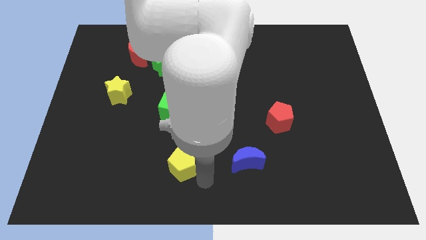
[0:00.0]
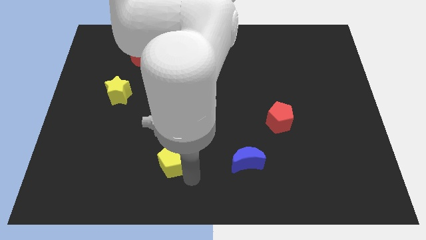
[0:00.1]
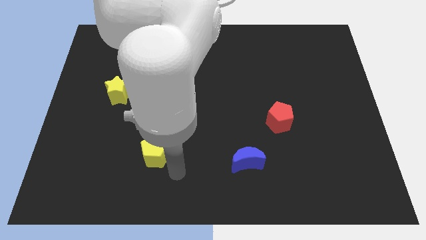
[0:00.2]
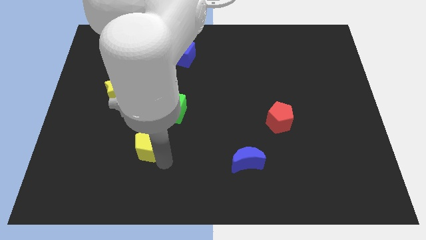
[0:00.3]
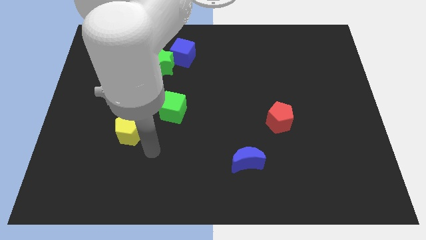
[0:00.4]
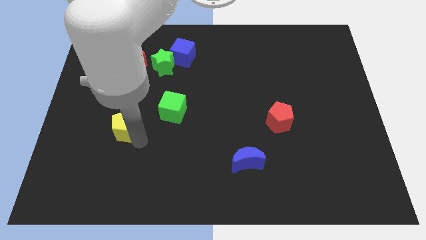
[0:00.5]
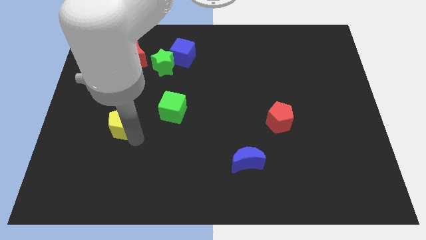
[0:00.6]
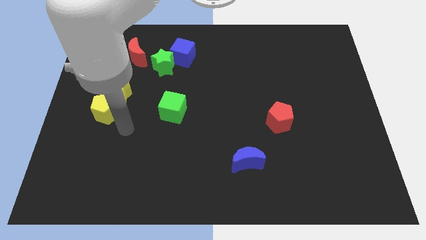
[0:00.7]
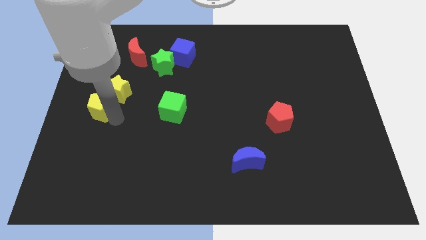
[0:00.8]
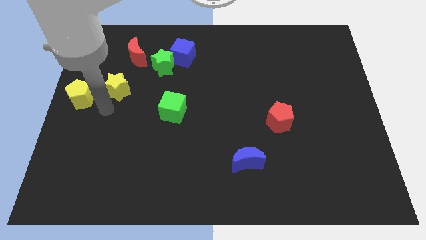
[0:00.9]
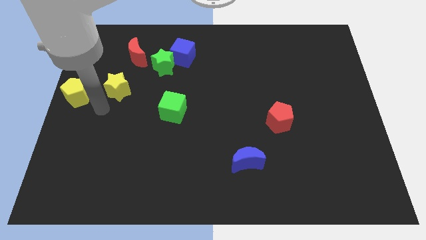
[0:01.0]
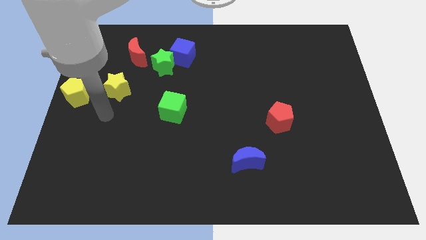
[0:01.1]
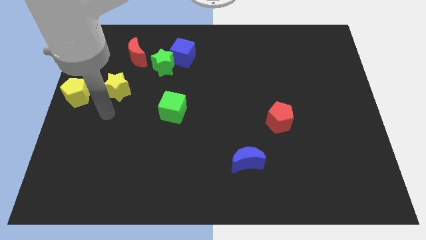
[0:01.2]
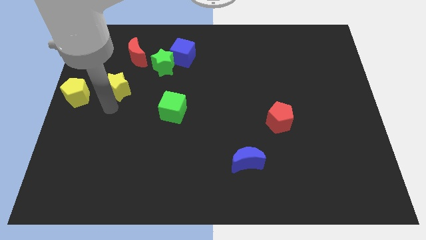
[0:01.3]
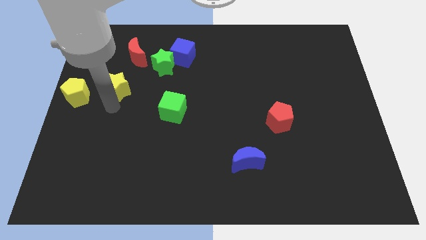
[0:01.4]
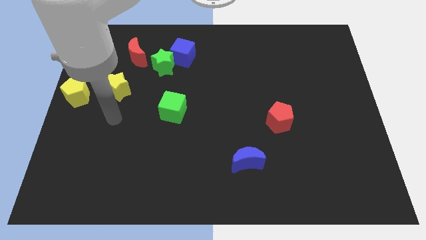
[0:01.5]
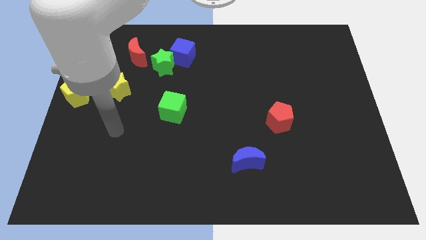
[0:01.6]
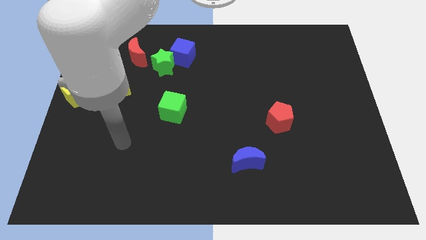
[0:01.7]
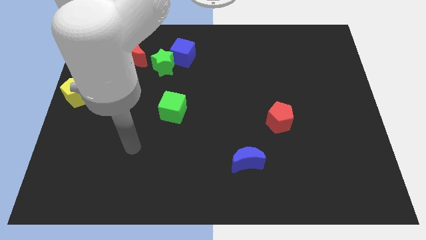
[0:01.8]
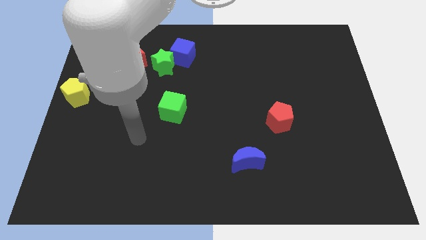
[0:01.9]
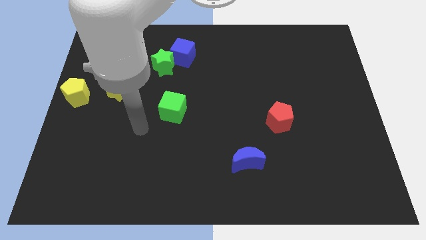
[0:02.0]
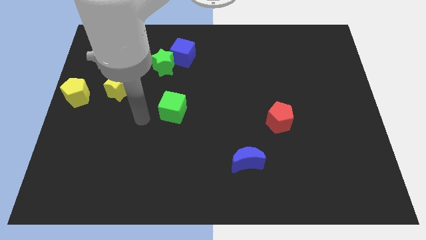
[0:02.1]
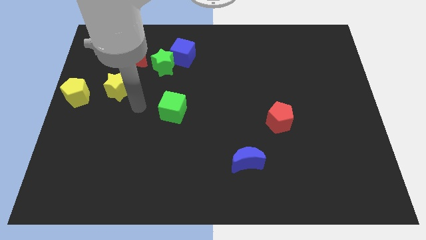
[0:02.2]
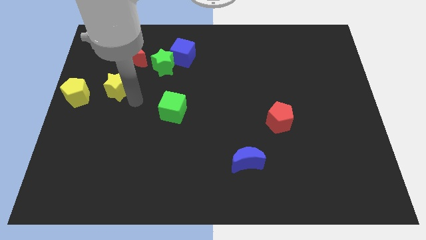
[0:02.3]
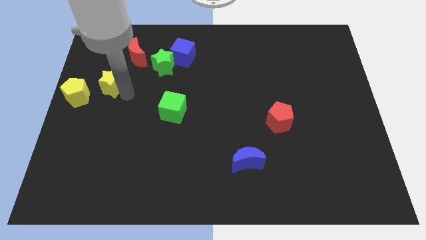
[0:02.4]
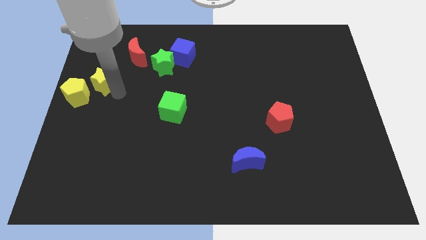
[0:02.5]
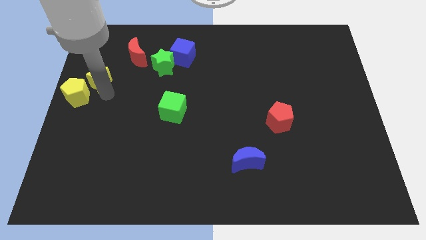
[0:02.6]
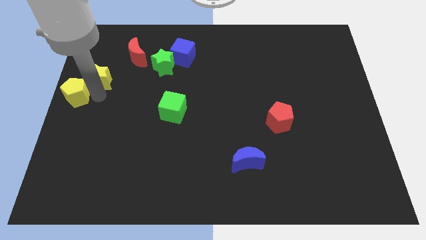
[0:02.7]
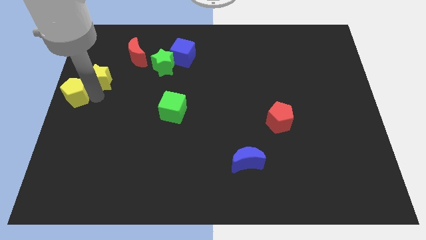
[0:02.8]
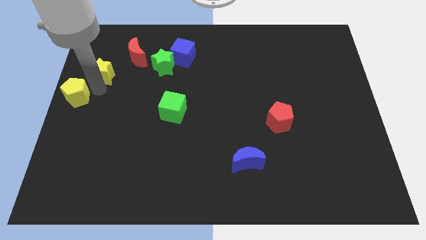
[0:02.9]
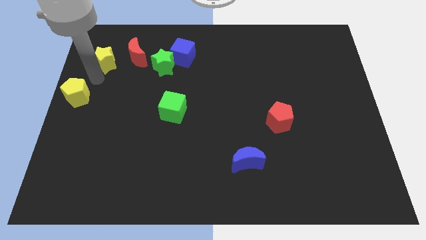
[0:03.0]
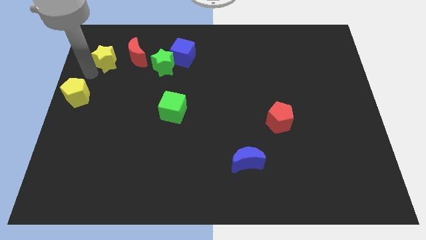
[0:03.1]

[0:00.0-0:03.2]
push the yellow blocks towards the top left

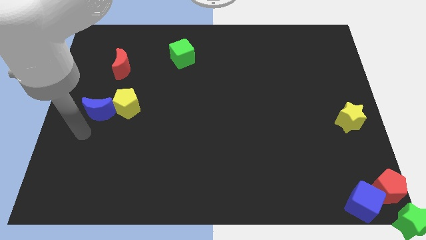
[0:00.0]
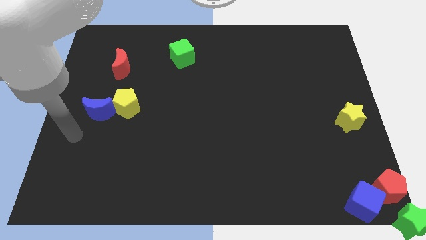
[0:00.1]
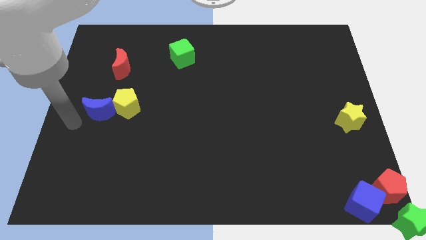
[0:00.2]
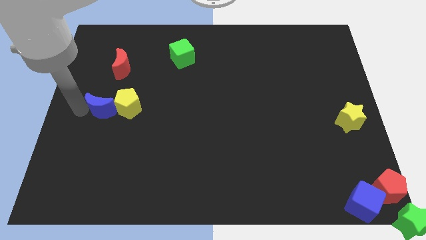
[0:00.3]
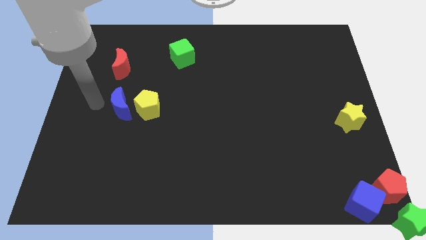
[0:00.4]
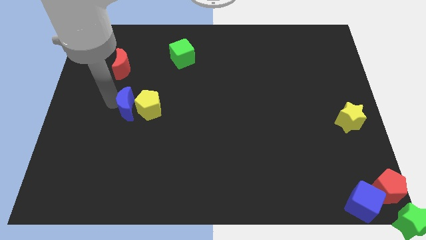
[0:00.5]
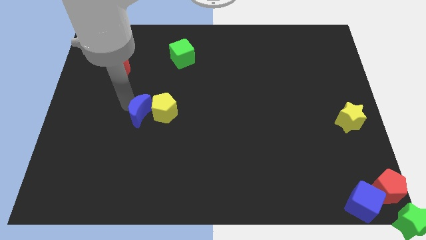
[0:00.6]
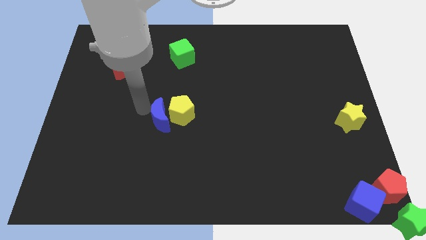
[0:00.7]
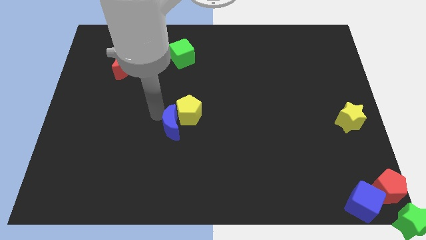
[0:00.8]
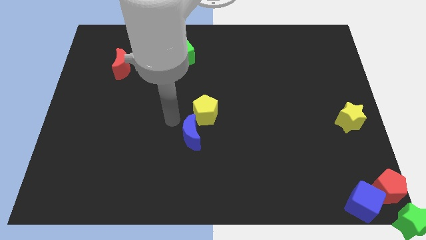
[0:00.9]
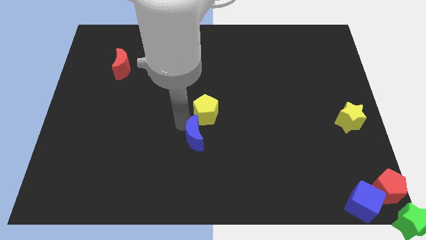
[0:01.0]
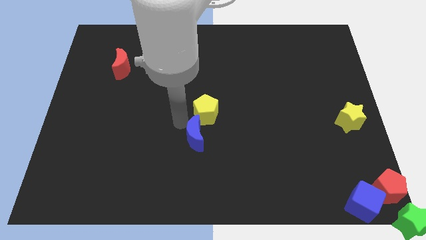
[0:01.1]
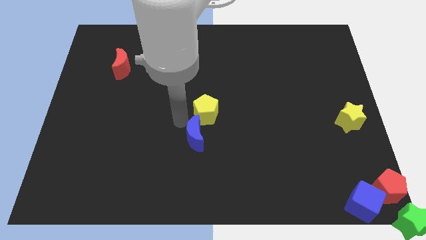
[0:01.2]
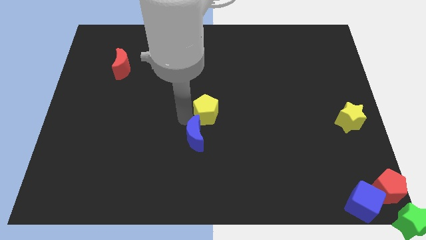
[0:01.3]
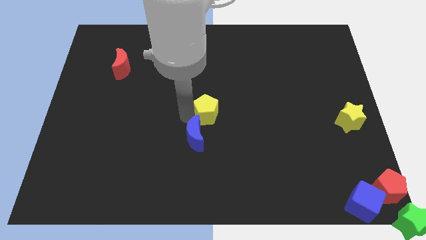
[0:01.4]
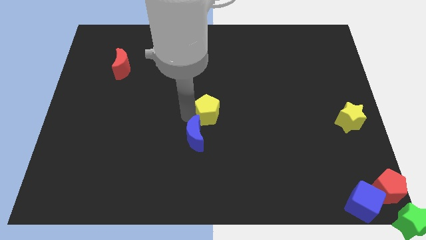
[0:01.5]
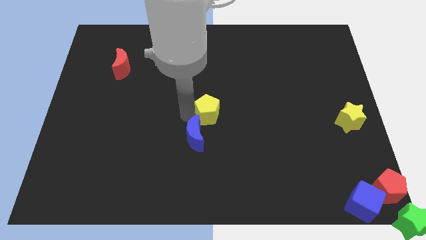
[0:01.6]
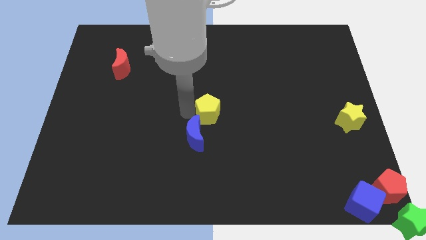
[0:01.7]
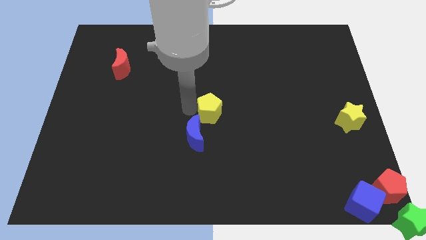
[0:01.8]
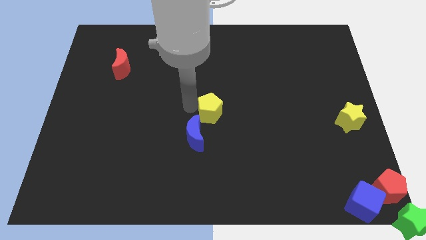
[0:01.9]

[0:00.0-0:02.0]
slightly move the blue crescent and yellow pentagon towards center

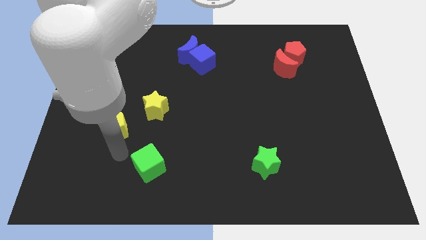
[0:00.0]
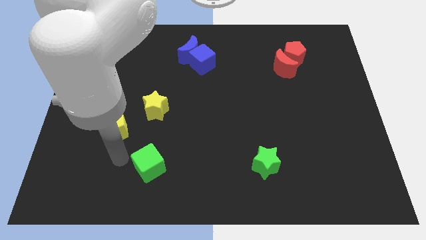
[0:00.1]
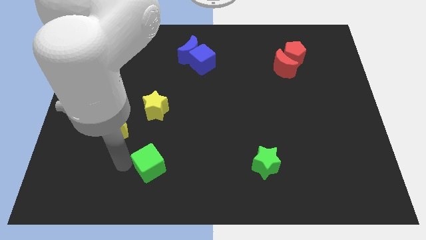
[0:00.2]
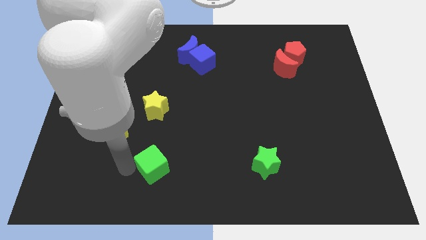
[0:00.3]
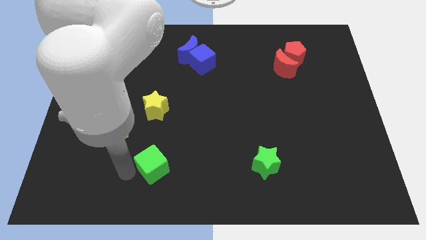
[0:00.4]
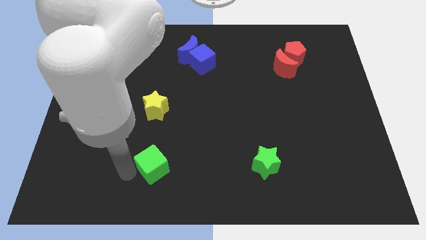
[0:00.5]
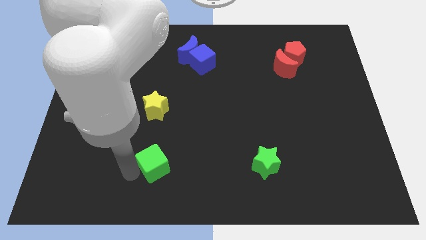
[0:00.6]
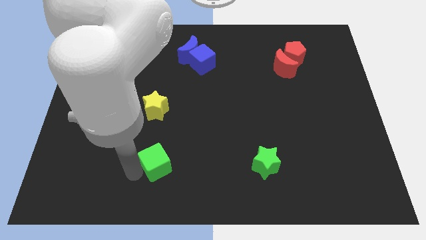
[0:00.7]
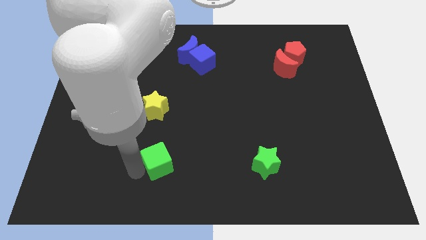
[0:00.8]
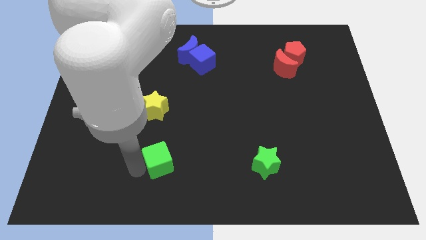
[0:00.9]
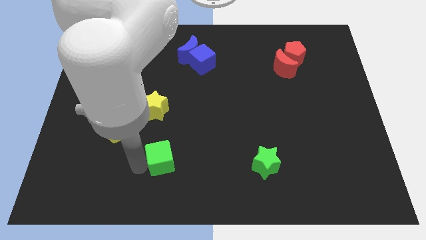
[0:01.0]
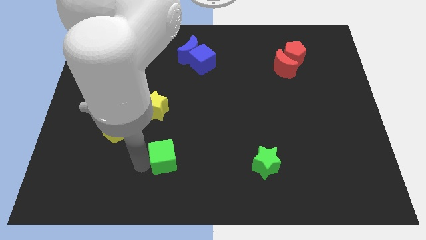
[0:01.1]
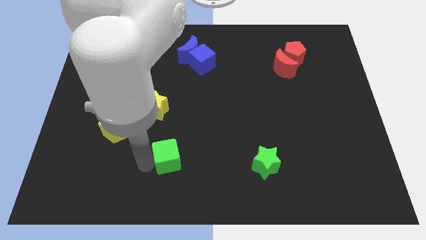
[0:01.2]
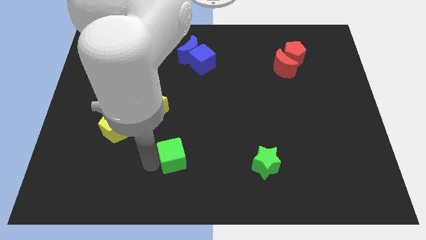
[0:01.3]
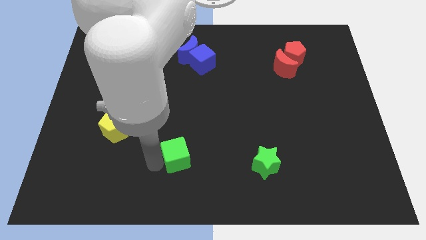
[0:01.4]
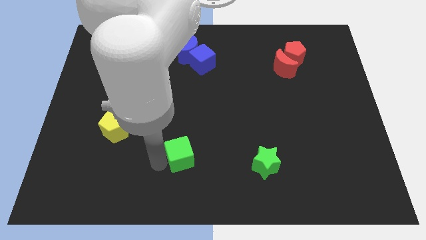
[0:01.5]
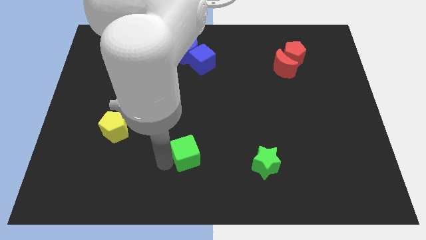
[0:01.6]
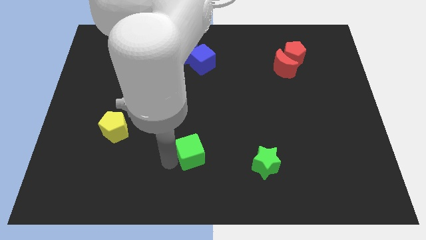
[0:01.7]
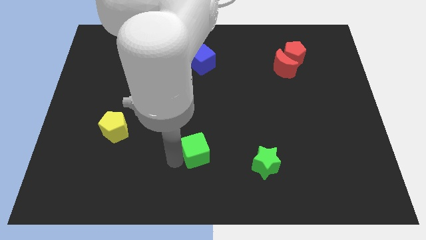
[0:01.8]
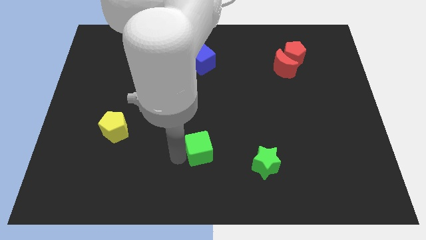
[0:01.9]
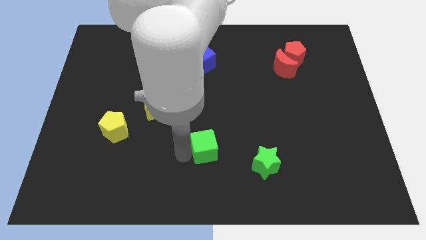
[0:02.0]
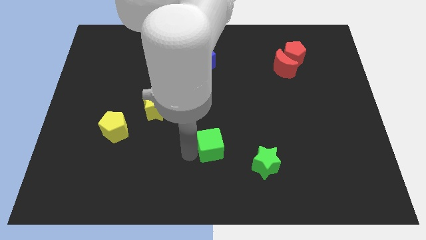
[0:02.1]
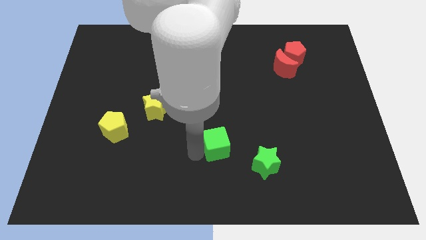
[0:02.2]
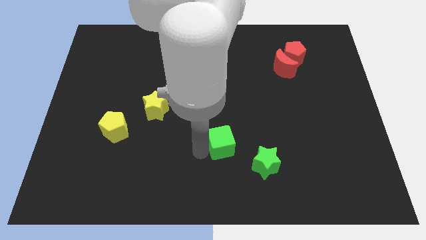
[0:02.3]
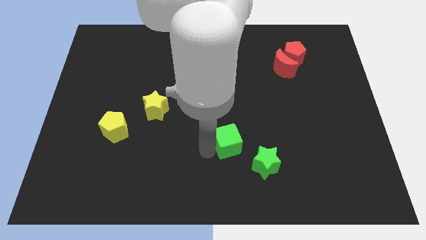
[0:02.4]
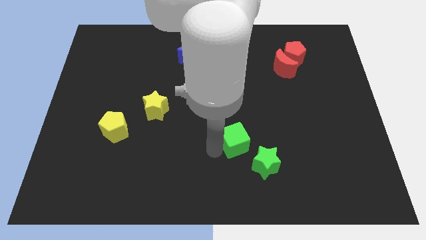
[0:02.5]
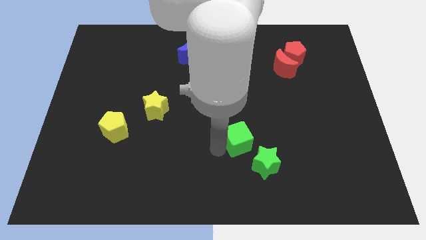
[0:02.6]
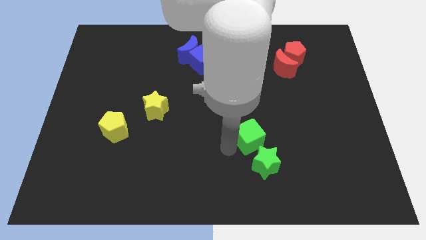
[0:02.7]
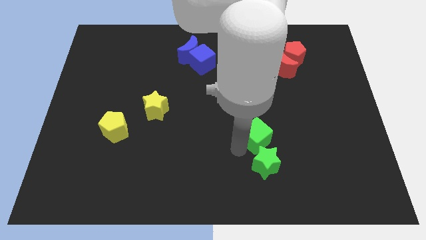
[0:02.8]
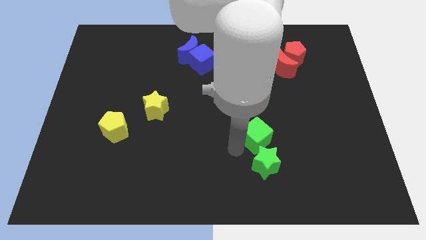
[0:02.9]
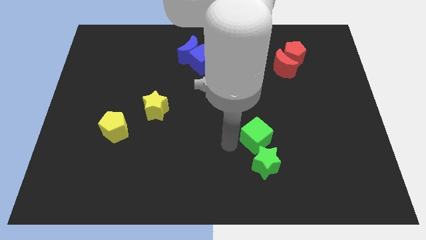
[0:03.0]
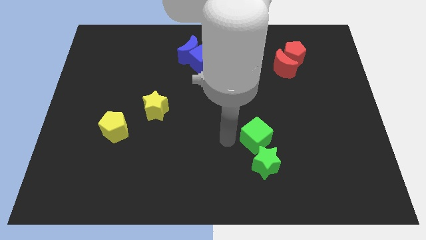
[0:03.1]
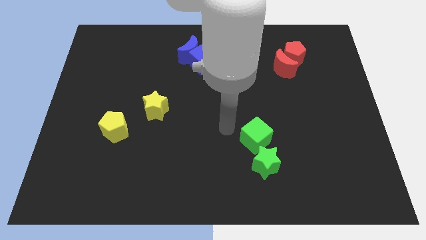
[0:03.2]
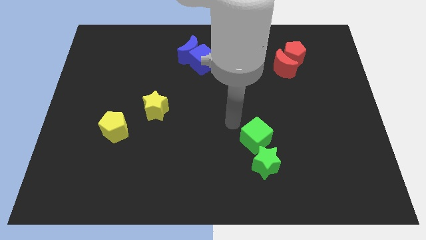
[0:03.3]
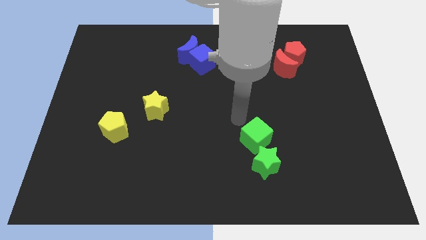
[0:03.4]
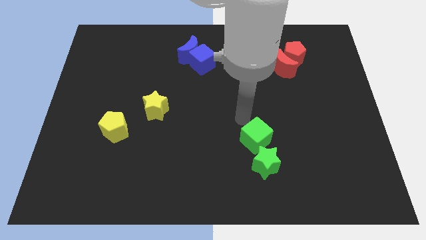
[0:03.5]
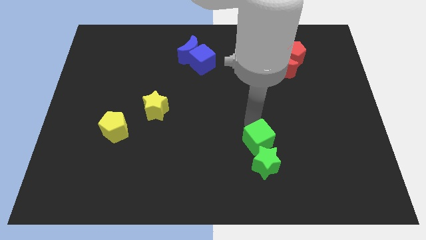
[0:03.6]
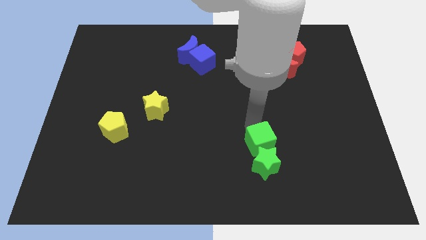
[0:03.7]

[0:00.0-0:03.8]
place the green cube at the top of green star

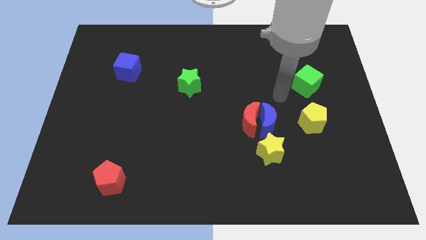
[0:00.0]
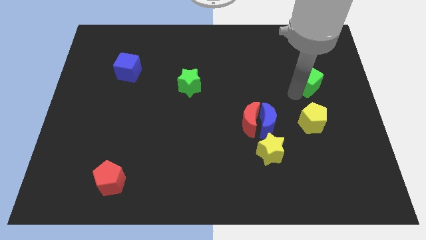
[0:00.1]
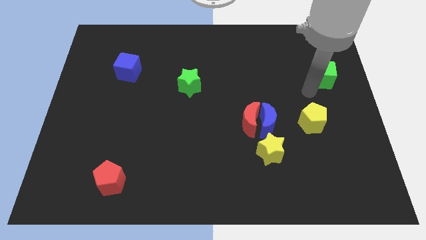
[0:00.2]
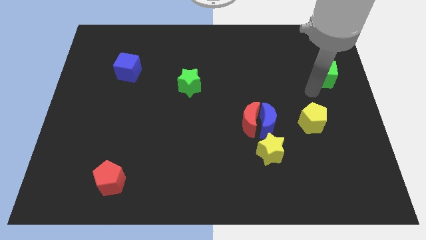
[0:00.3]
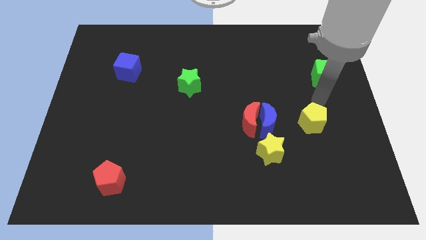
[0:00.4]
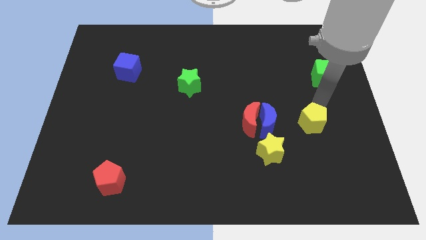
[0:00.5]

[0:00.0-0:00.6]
push the green cube slightly to the top
